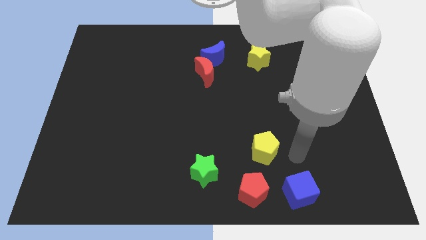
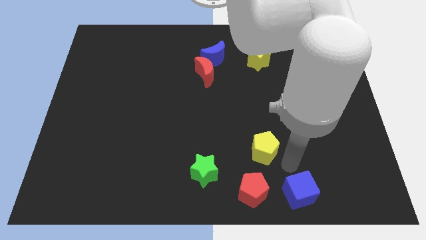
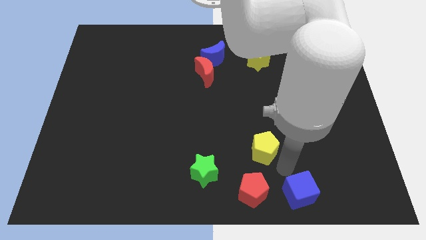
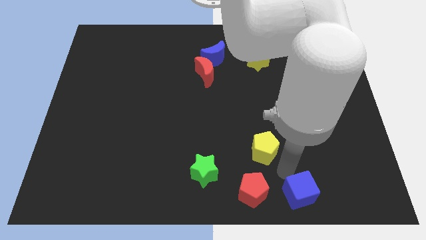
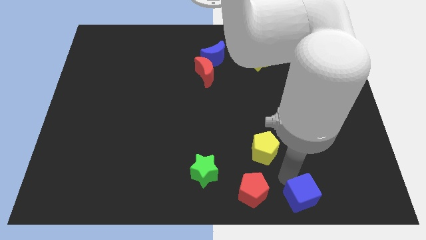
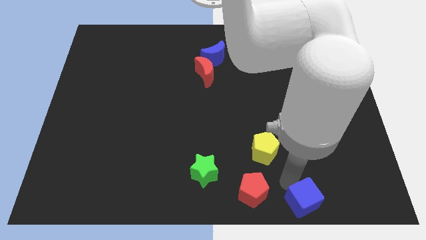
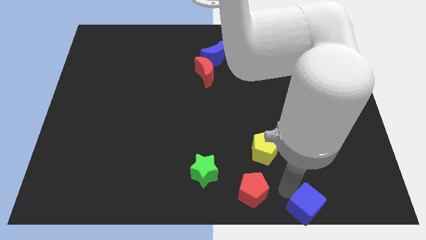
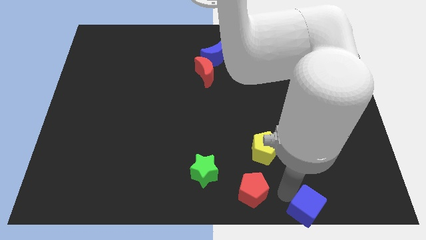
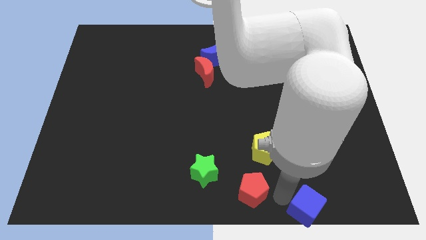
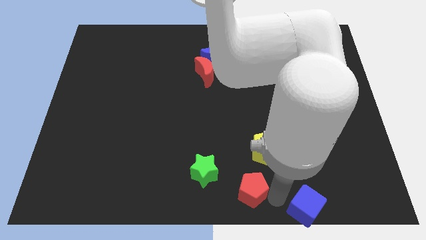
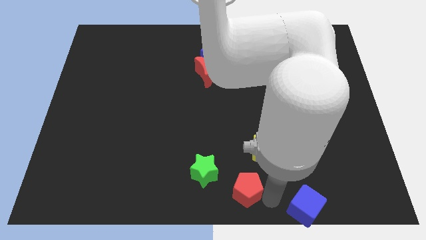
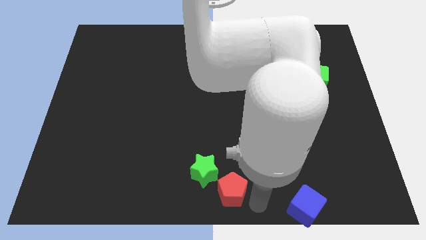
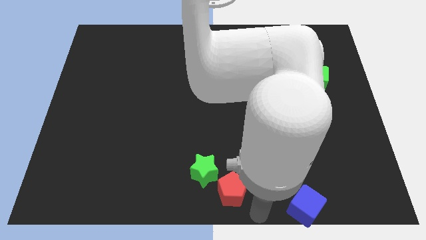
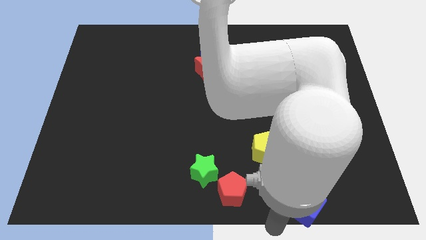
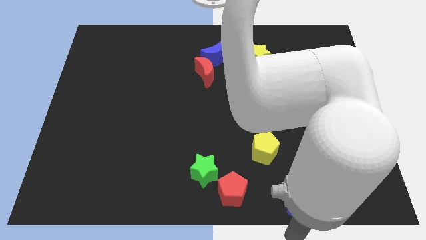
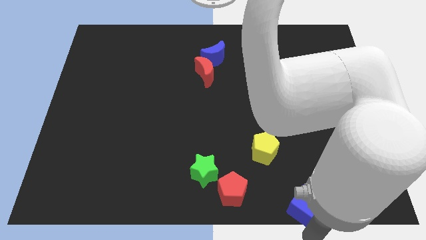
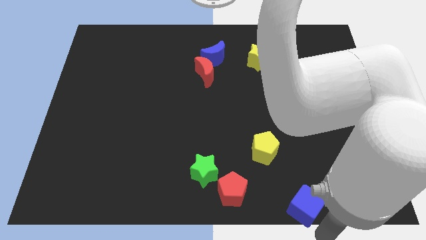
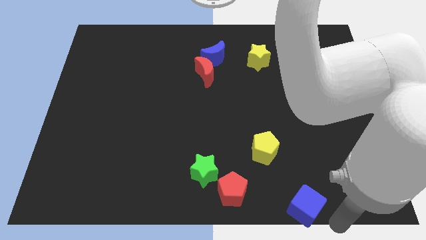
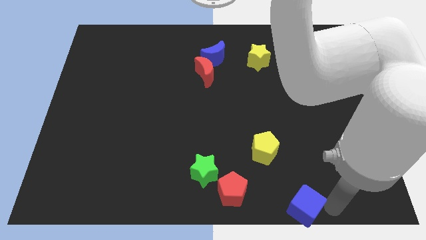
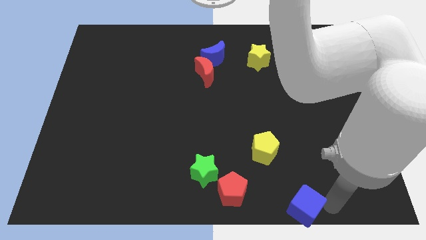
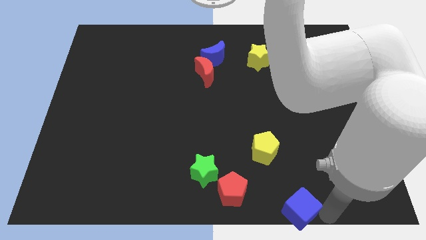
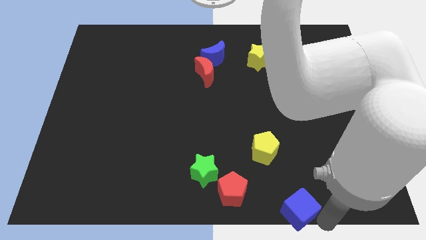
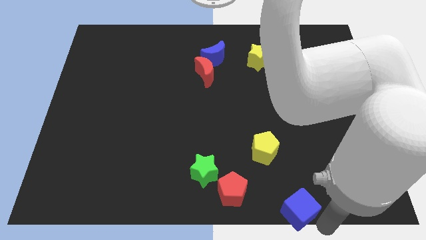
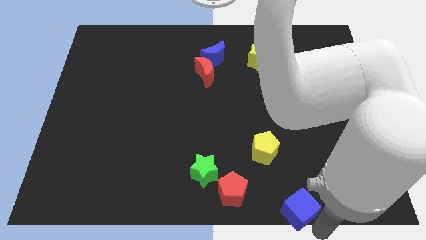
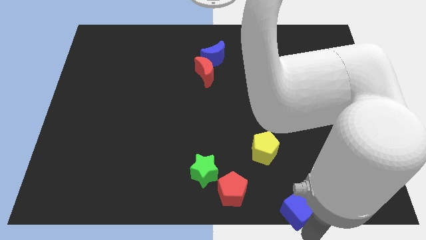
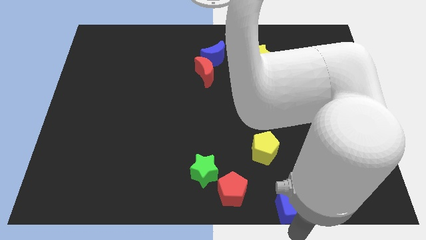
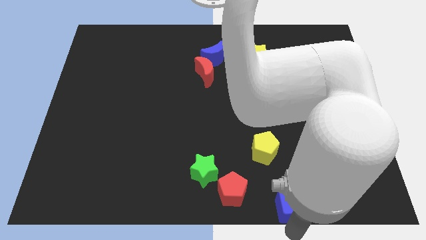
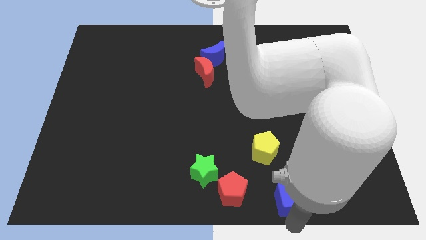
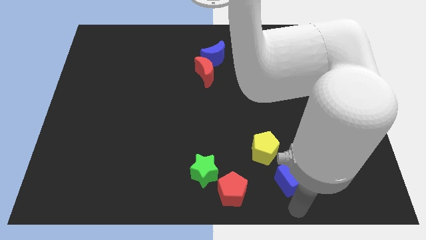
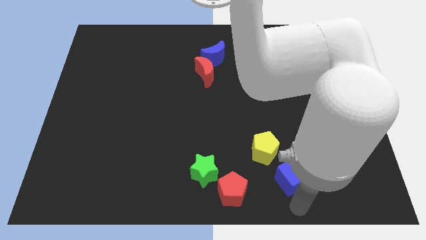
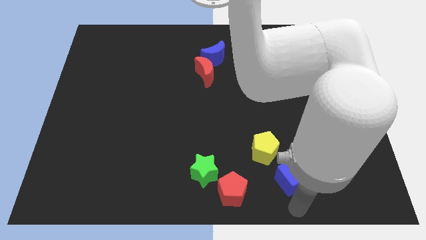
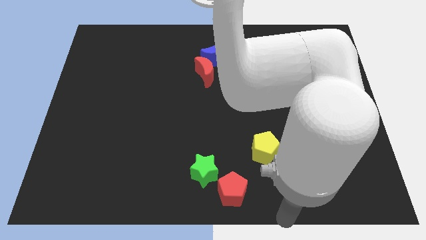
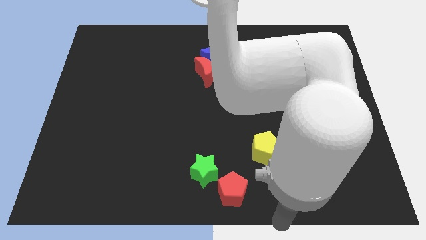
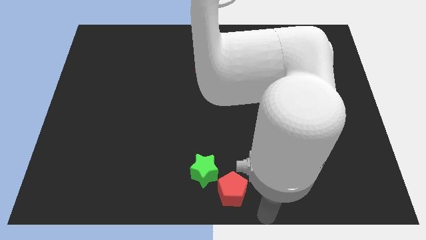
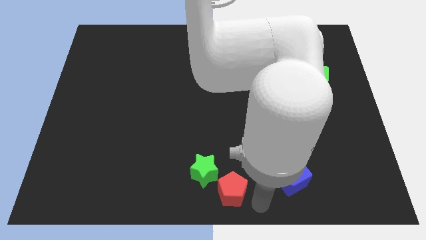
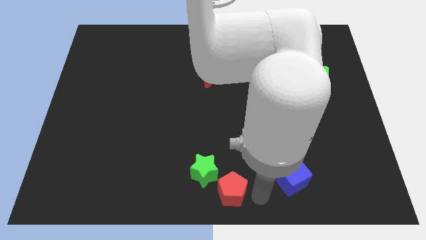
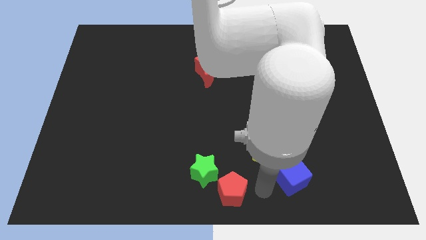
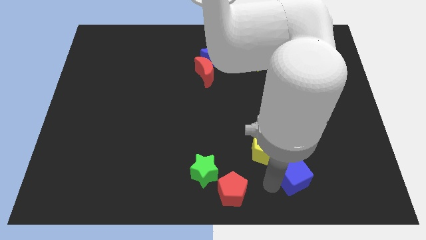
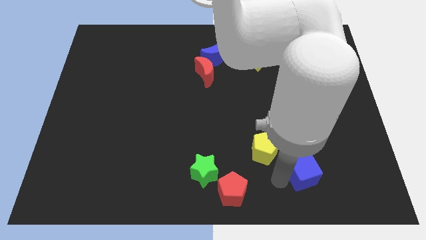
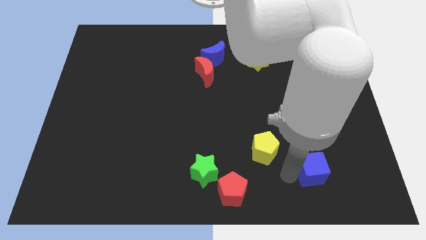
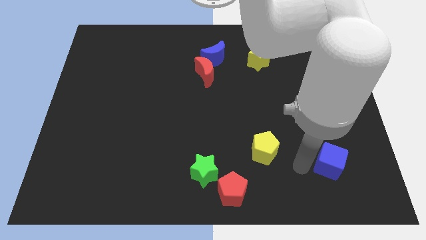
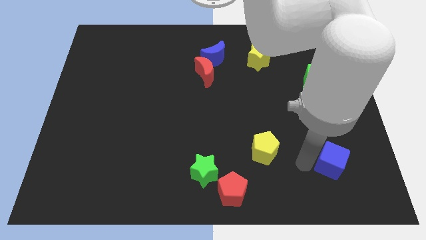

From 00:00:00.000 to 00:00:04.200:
move the blue cube to the right of the yellow pentagon

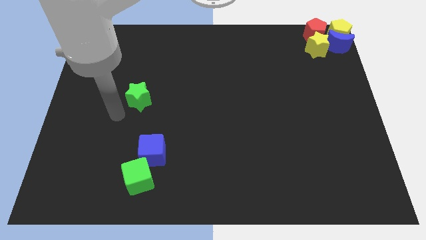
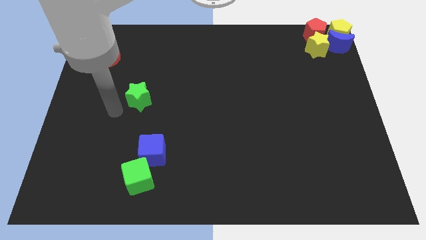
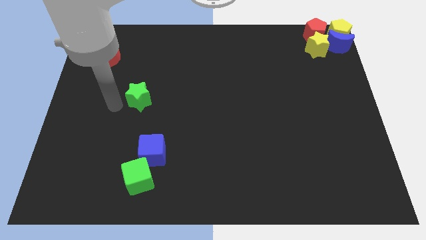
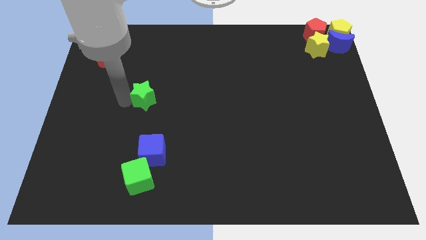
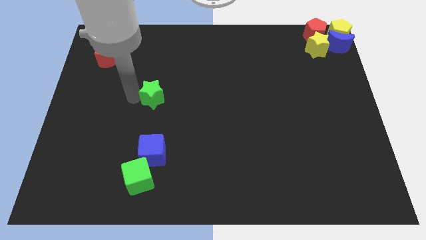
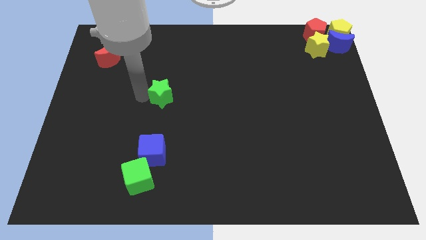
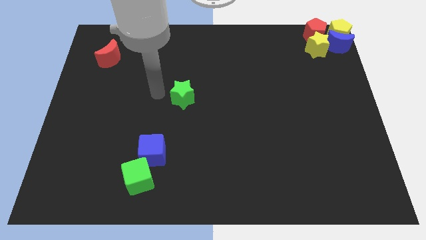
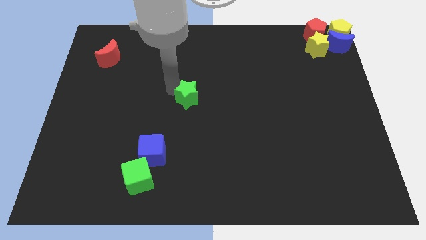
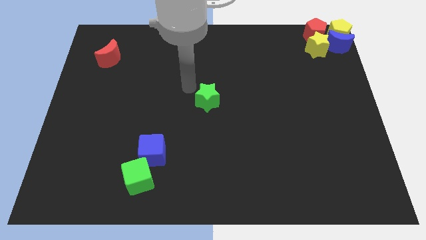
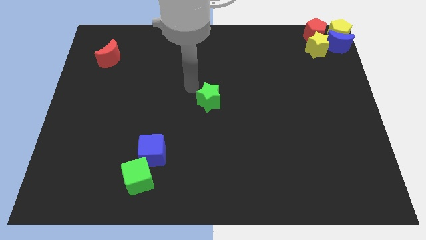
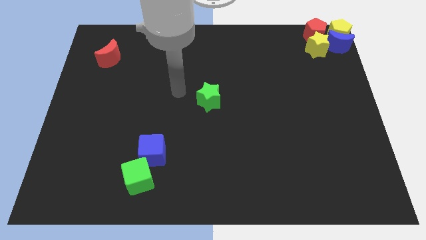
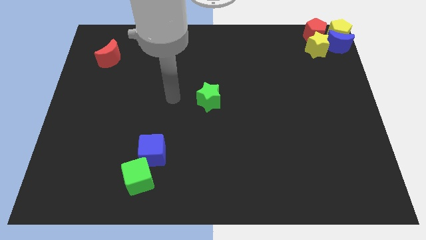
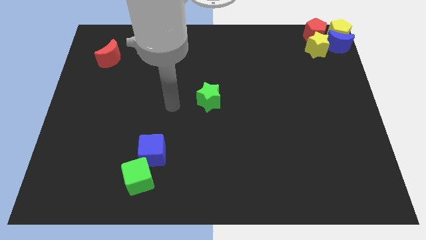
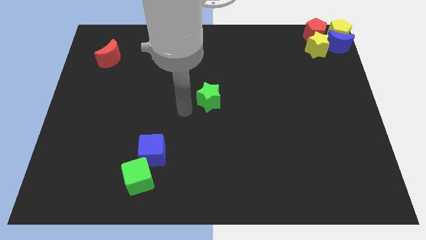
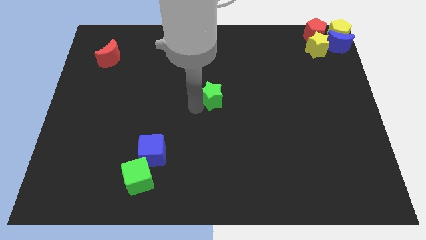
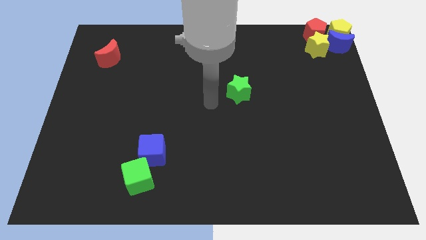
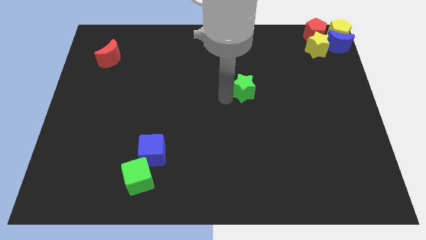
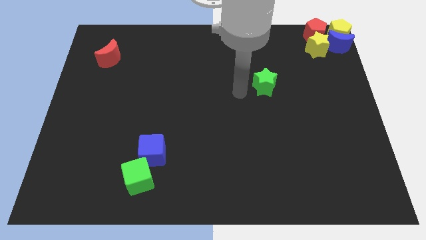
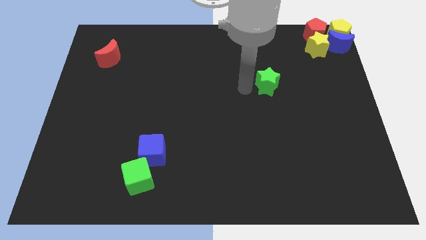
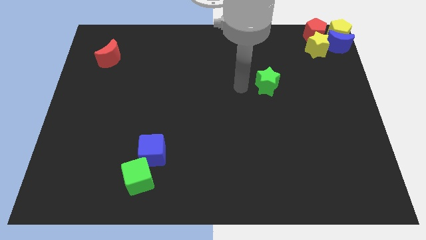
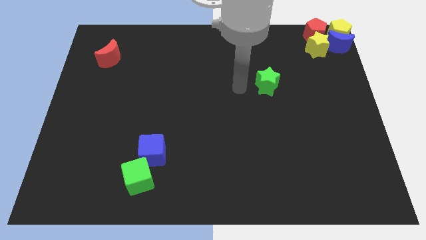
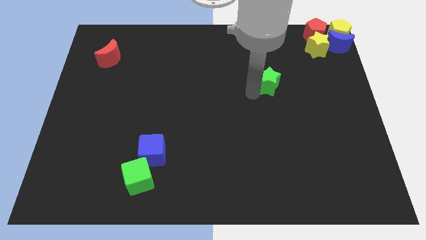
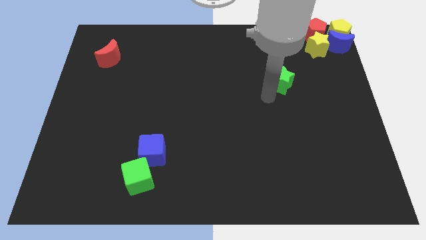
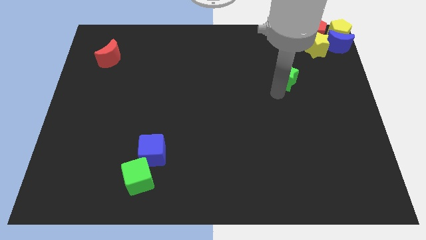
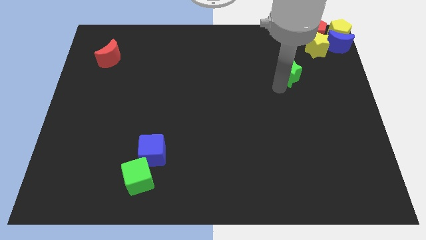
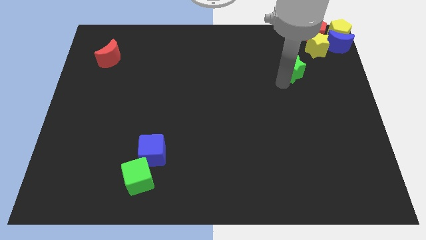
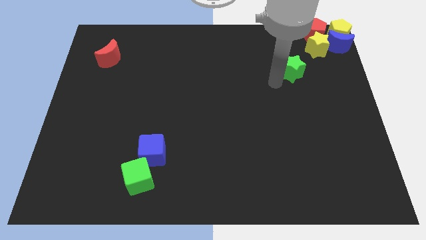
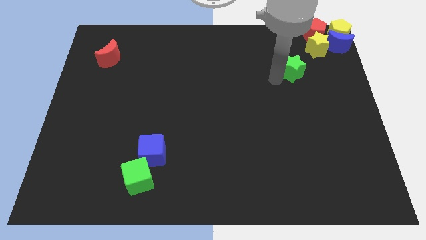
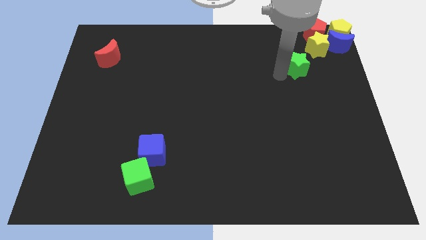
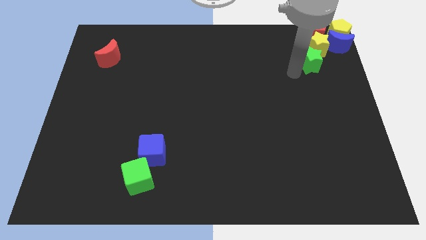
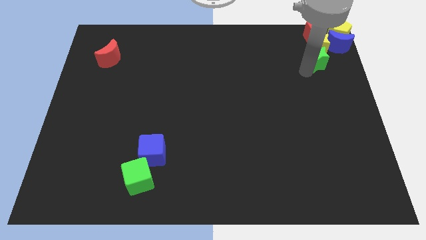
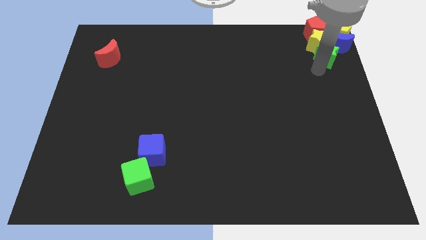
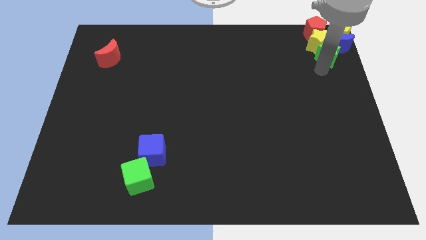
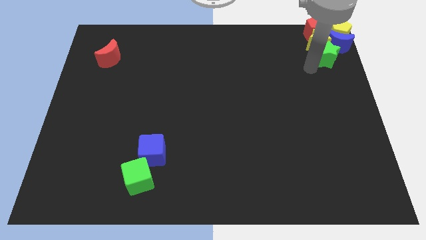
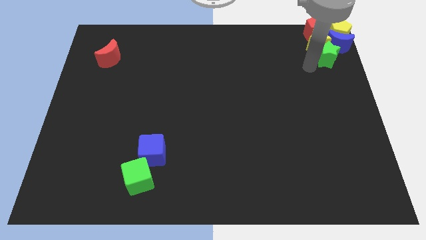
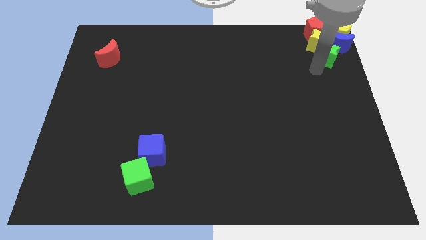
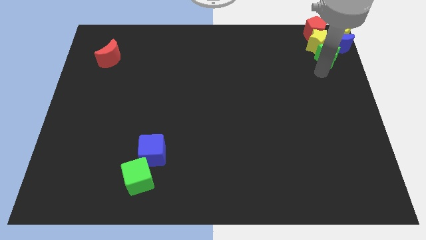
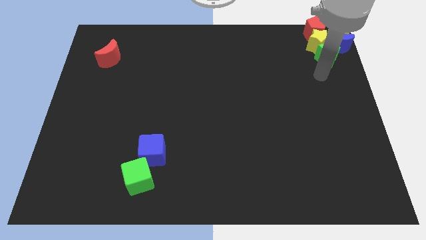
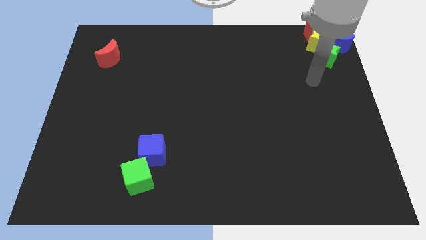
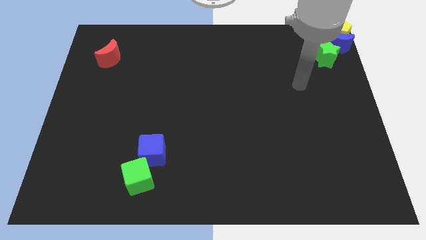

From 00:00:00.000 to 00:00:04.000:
push the green star to the bottom side of the yellow star

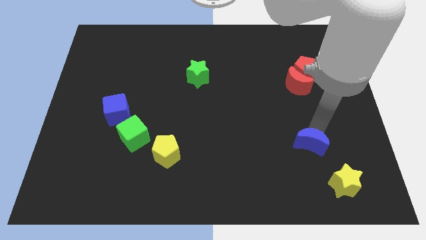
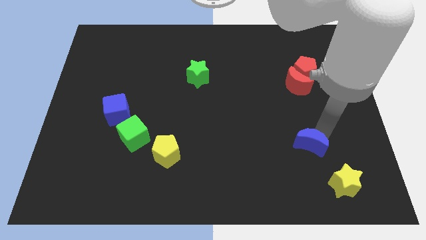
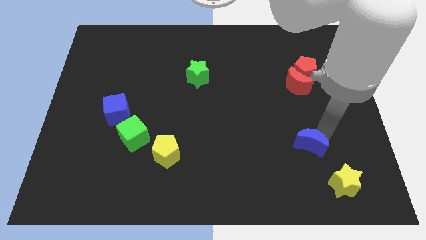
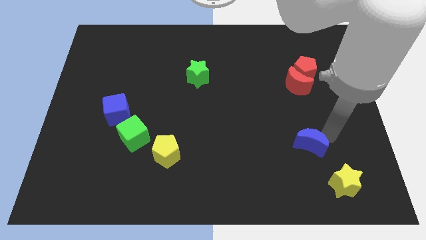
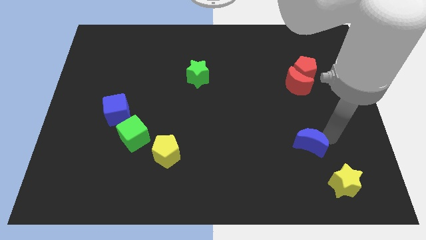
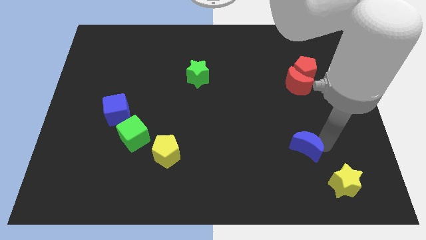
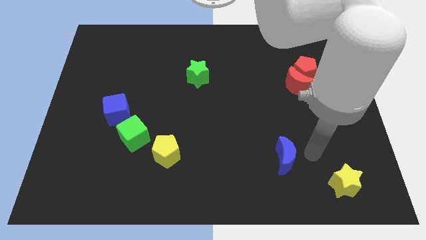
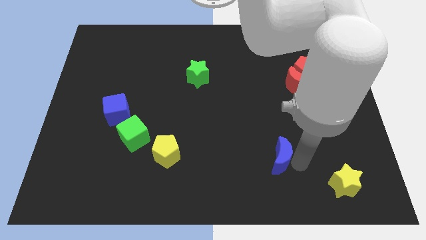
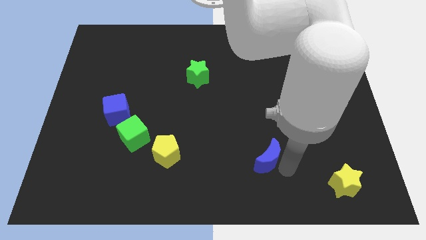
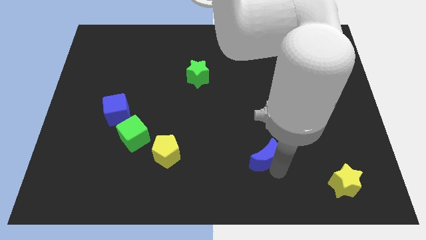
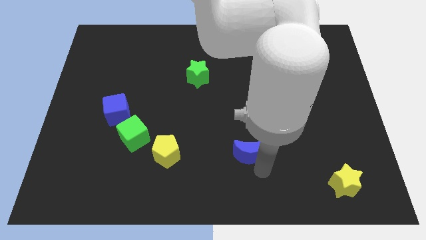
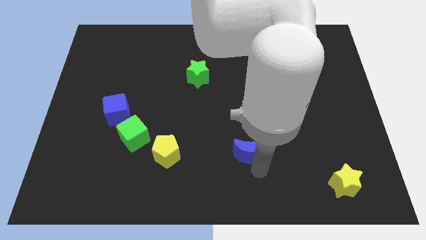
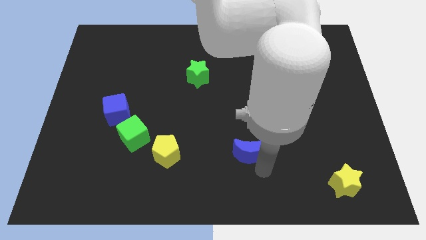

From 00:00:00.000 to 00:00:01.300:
place blue moon to the right of yellow pentagon
